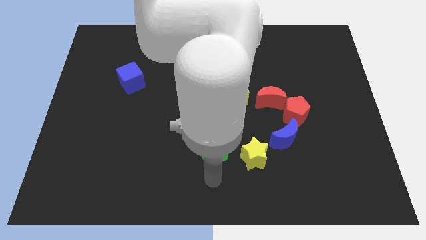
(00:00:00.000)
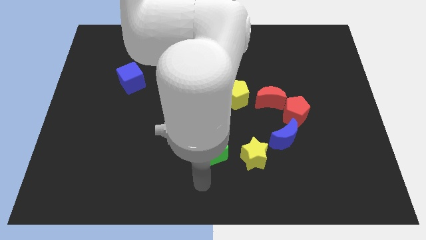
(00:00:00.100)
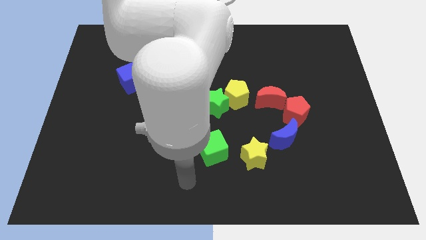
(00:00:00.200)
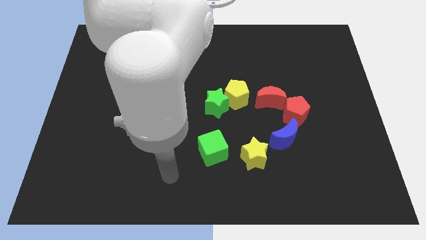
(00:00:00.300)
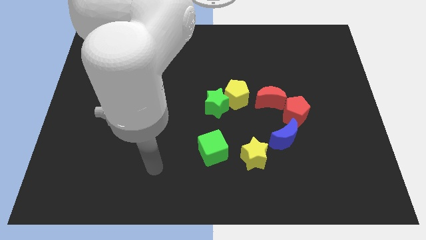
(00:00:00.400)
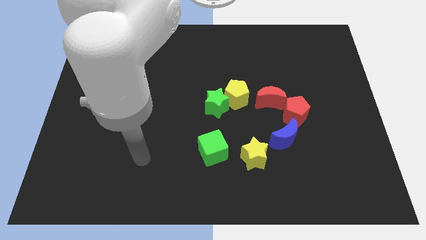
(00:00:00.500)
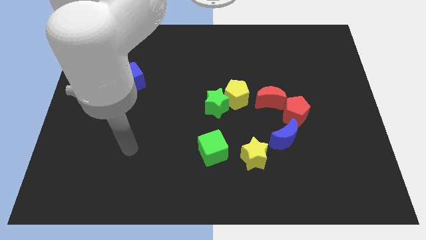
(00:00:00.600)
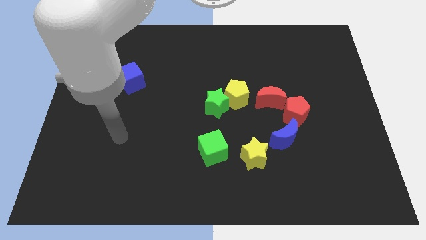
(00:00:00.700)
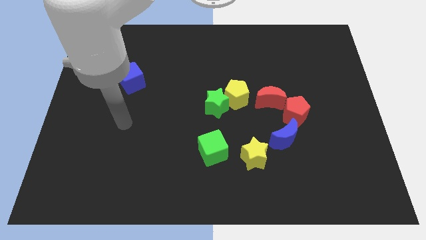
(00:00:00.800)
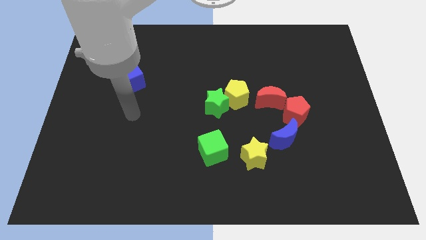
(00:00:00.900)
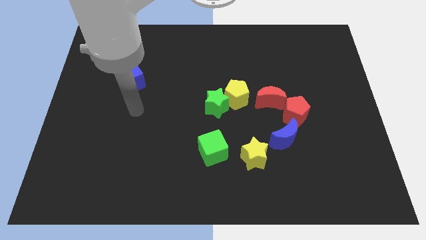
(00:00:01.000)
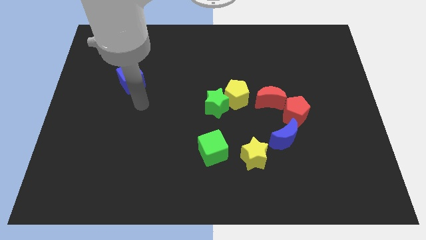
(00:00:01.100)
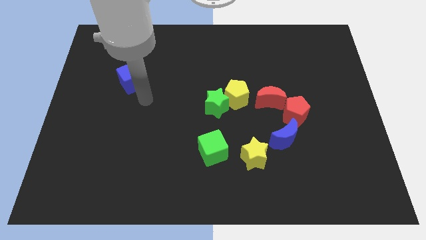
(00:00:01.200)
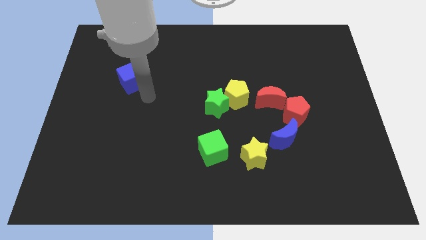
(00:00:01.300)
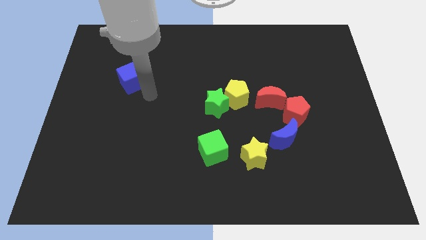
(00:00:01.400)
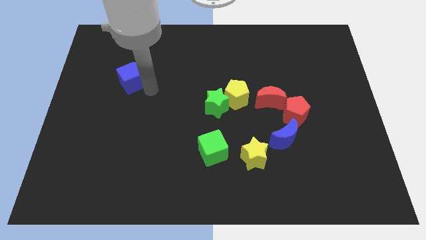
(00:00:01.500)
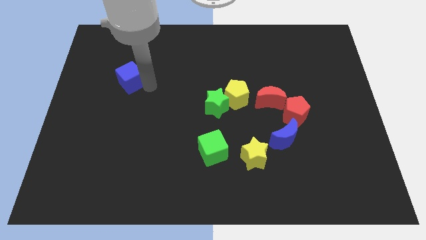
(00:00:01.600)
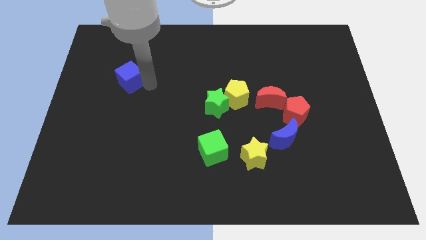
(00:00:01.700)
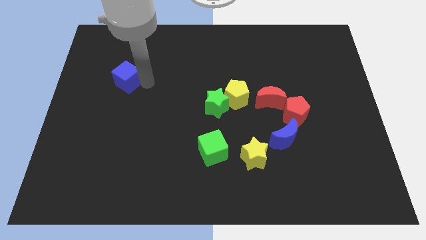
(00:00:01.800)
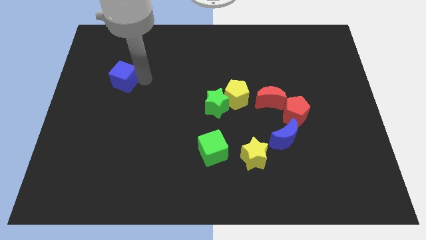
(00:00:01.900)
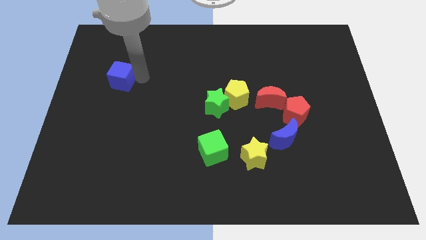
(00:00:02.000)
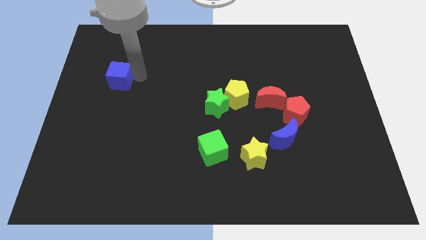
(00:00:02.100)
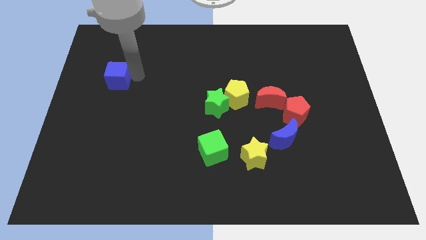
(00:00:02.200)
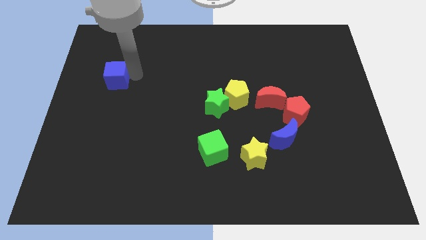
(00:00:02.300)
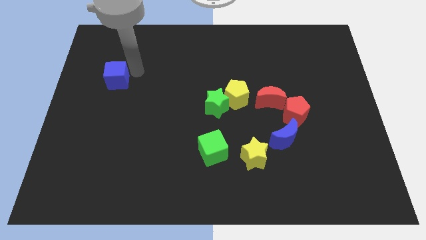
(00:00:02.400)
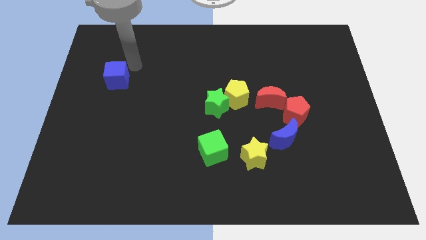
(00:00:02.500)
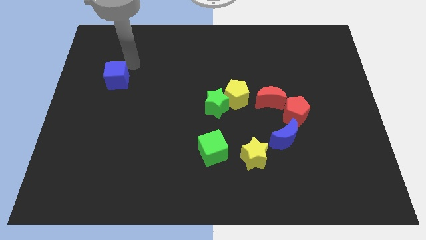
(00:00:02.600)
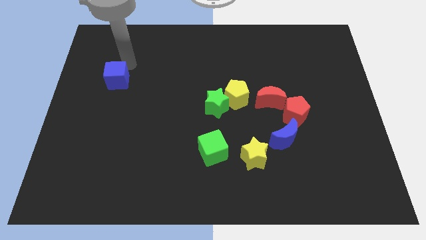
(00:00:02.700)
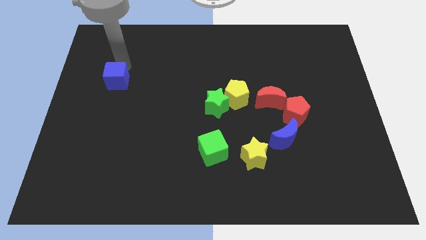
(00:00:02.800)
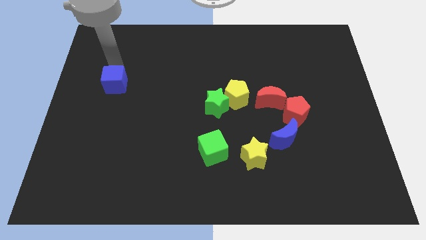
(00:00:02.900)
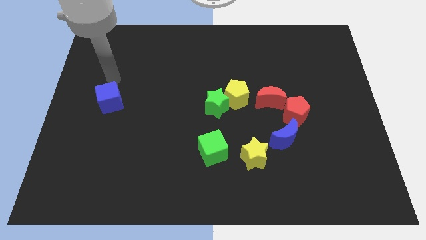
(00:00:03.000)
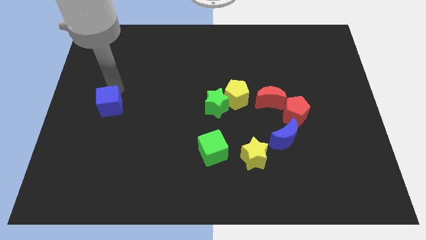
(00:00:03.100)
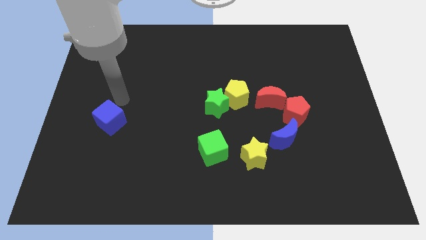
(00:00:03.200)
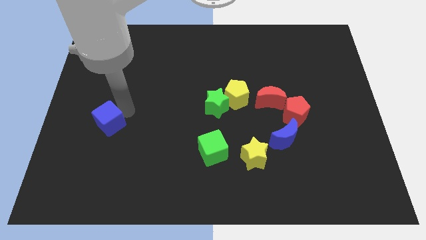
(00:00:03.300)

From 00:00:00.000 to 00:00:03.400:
push the blue cube to the left center of the board

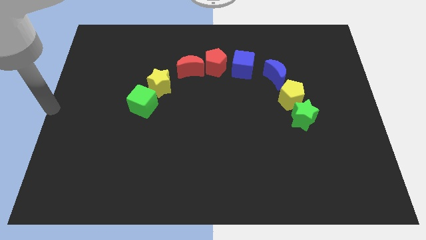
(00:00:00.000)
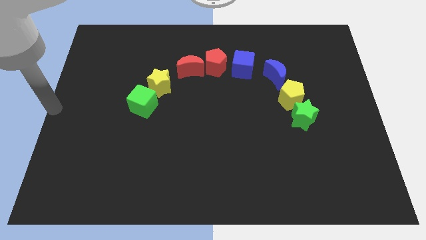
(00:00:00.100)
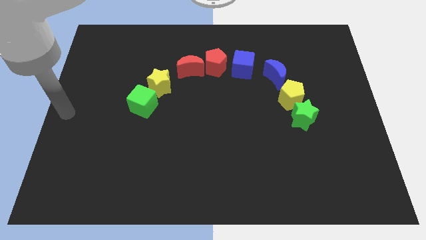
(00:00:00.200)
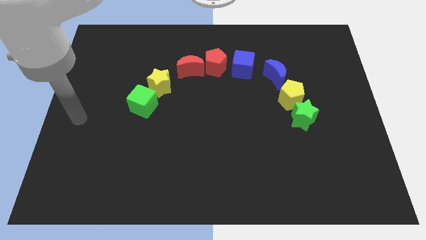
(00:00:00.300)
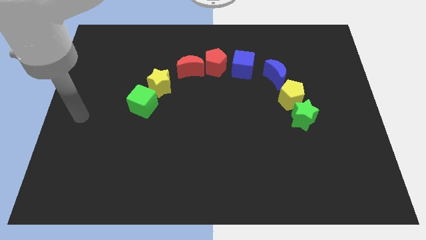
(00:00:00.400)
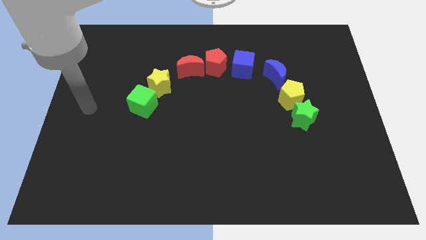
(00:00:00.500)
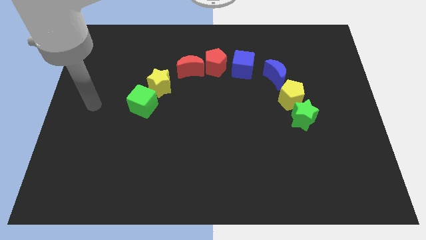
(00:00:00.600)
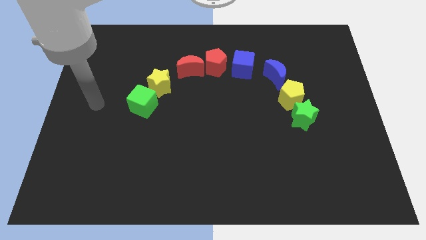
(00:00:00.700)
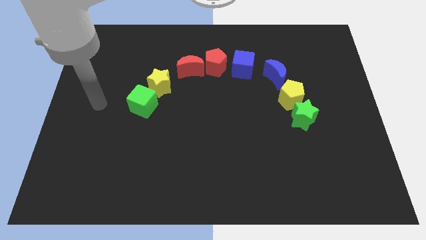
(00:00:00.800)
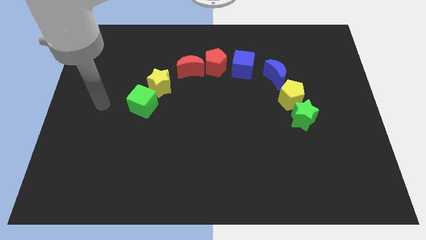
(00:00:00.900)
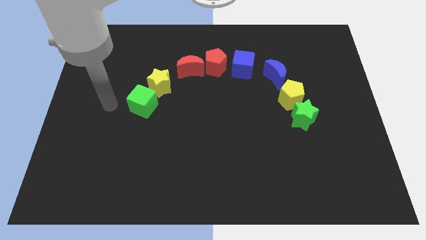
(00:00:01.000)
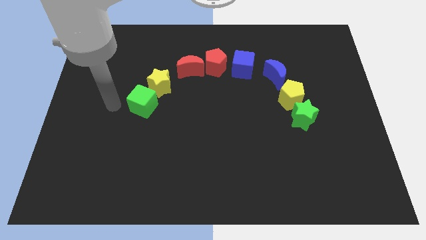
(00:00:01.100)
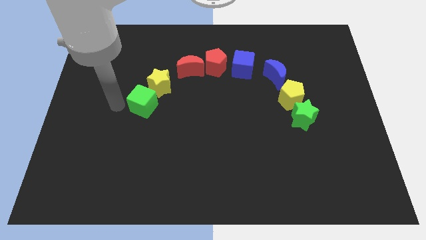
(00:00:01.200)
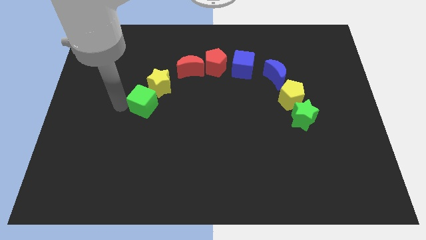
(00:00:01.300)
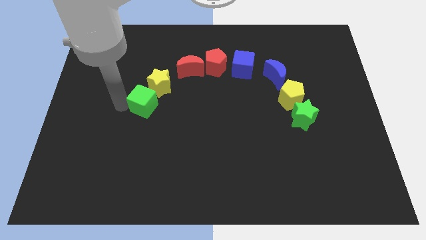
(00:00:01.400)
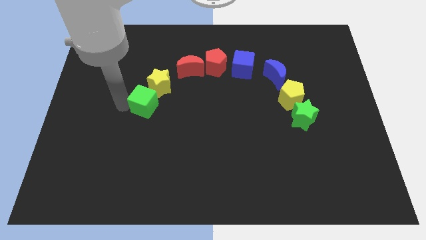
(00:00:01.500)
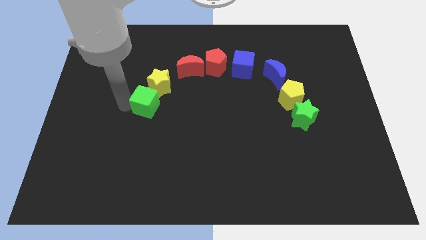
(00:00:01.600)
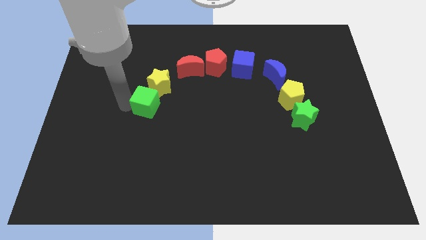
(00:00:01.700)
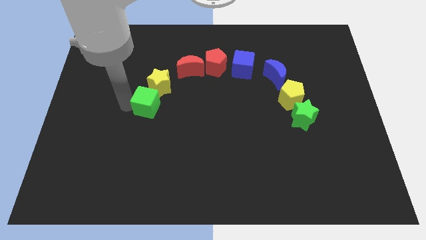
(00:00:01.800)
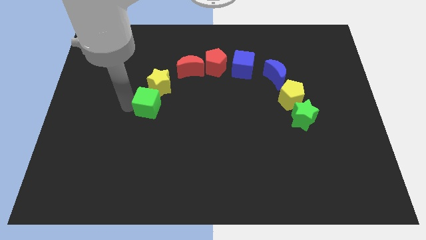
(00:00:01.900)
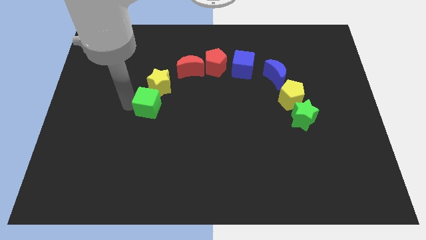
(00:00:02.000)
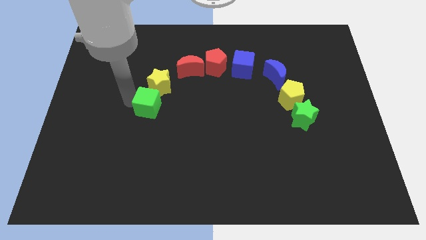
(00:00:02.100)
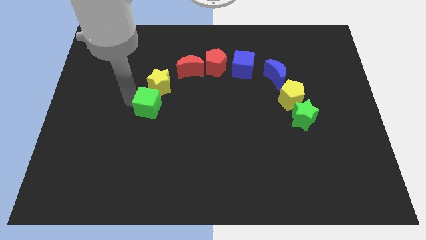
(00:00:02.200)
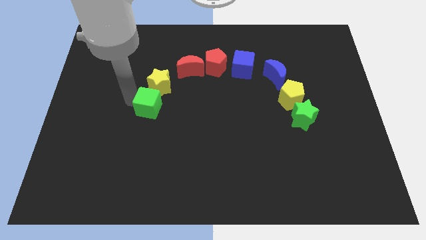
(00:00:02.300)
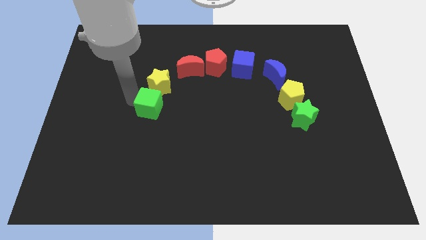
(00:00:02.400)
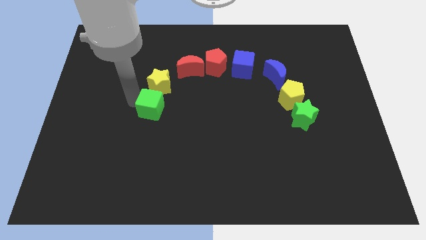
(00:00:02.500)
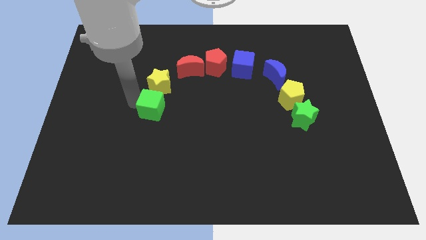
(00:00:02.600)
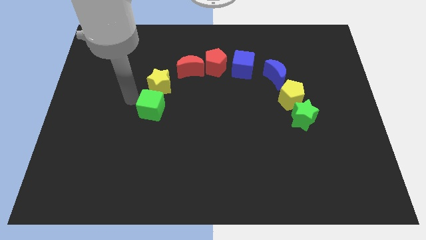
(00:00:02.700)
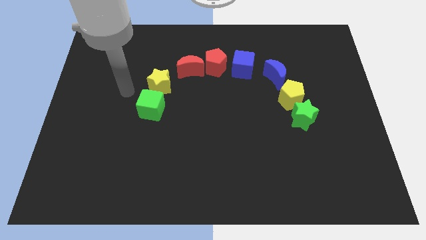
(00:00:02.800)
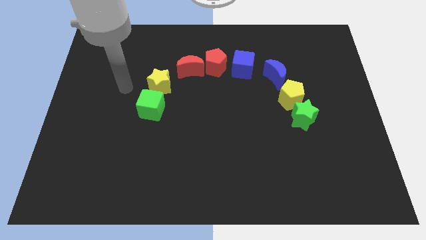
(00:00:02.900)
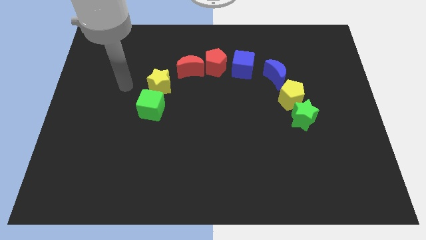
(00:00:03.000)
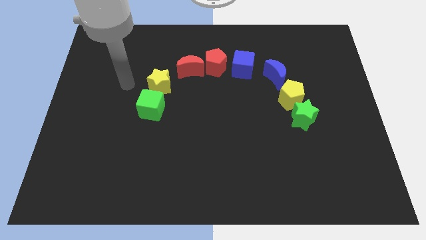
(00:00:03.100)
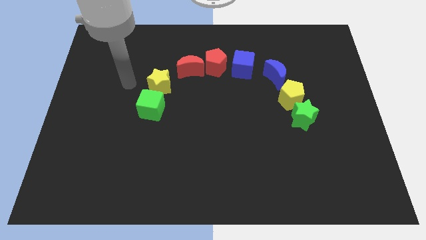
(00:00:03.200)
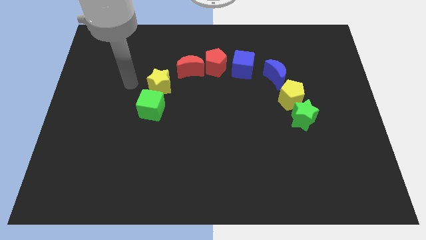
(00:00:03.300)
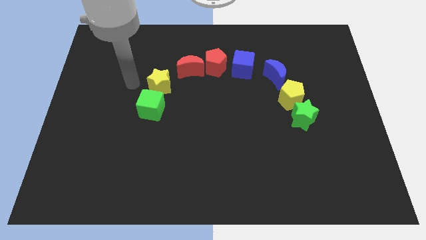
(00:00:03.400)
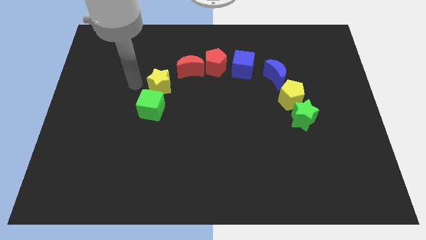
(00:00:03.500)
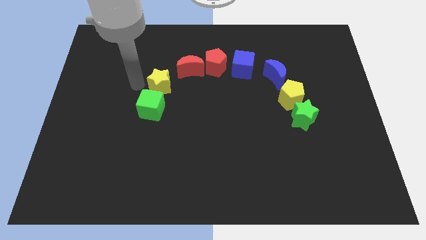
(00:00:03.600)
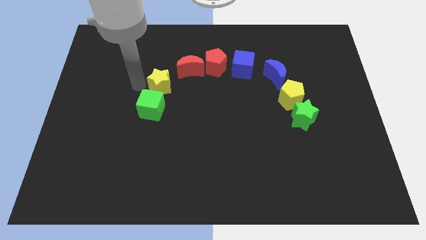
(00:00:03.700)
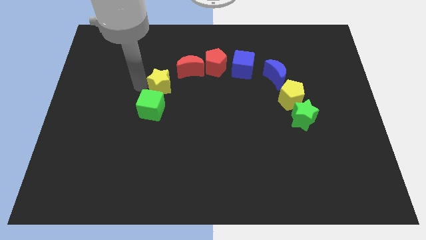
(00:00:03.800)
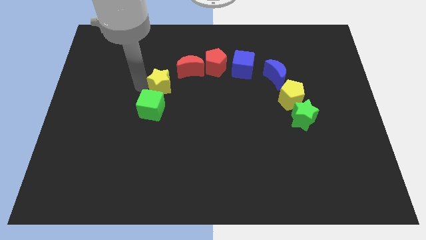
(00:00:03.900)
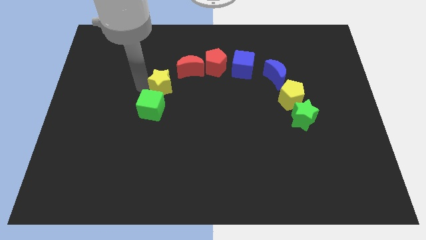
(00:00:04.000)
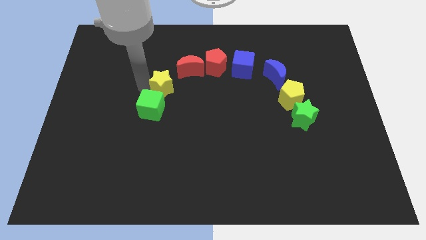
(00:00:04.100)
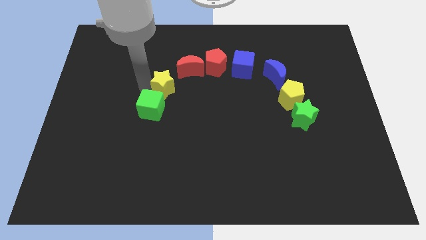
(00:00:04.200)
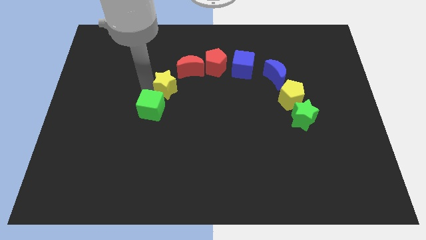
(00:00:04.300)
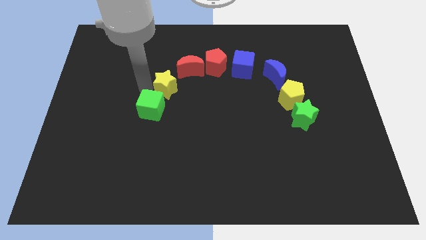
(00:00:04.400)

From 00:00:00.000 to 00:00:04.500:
push the yellow star slightly towards right

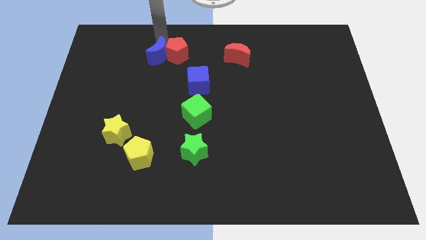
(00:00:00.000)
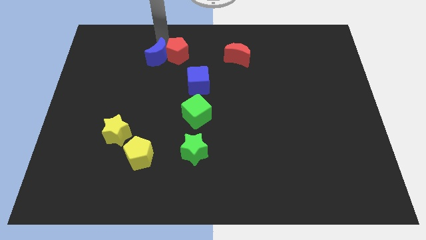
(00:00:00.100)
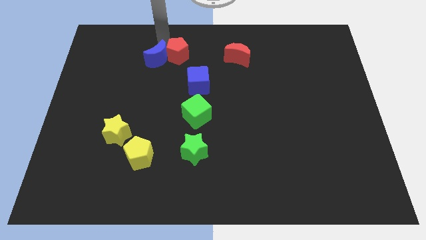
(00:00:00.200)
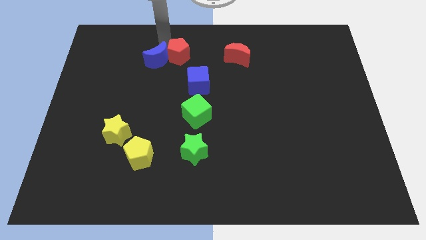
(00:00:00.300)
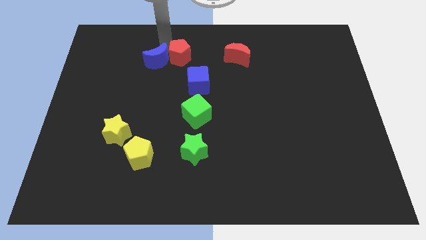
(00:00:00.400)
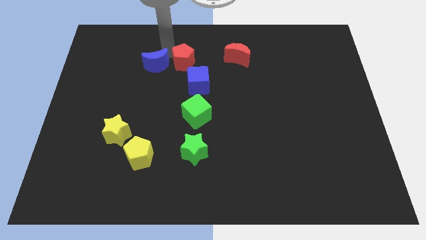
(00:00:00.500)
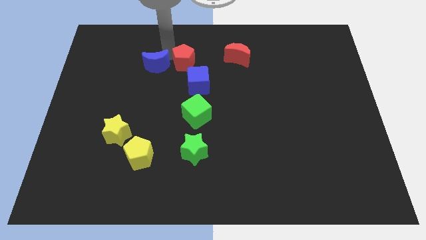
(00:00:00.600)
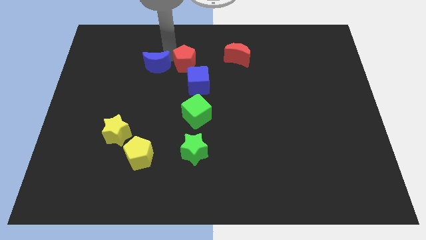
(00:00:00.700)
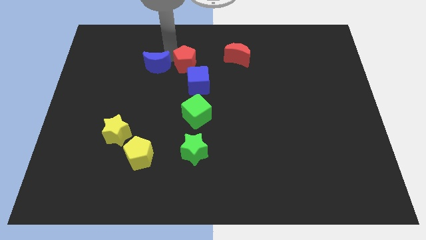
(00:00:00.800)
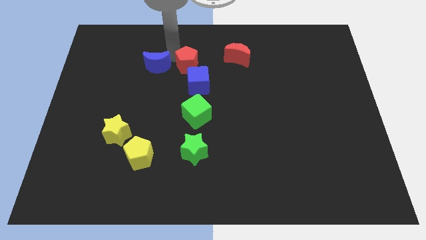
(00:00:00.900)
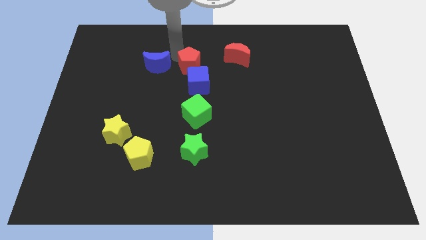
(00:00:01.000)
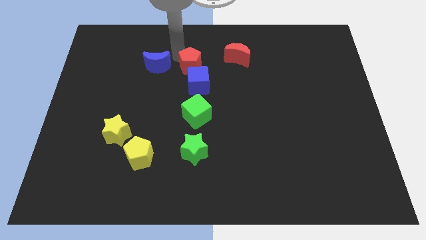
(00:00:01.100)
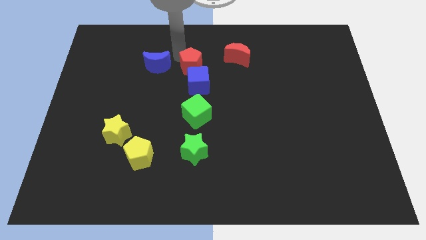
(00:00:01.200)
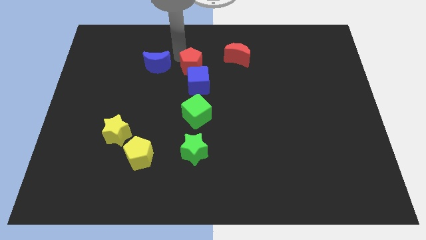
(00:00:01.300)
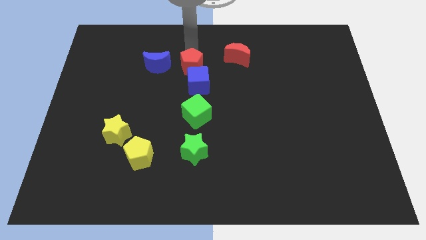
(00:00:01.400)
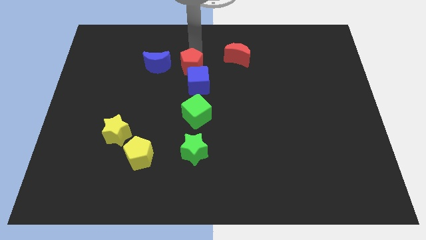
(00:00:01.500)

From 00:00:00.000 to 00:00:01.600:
place the red pentagon above the blue cube
